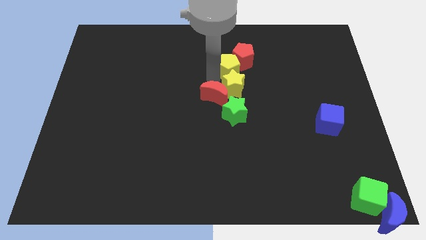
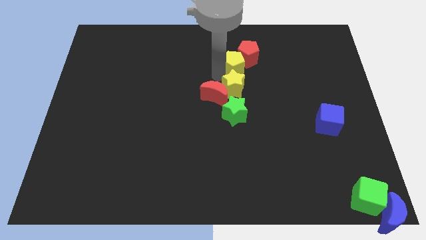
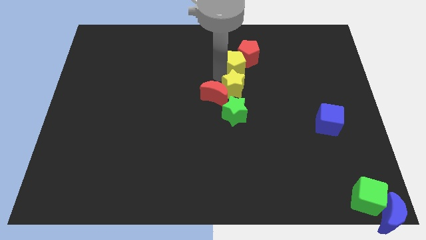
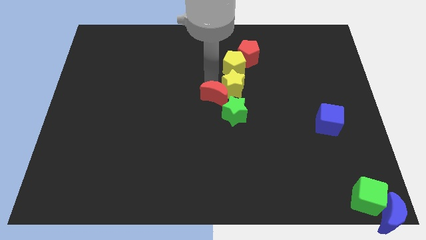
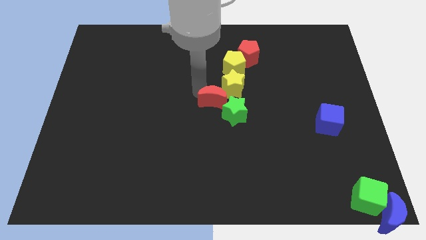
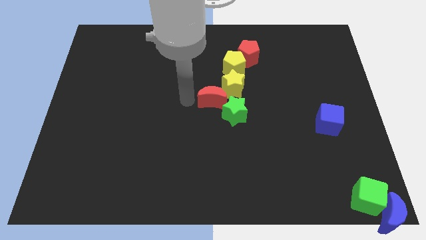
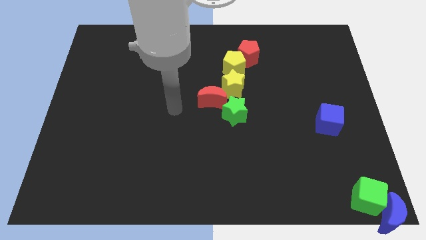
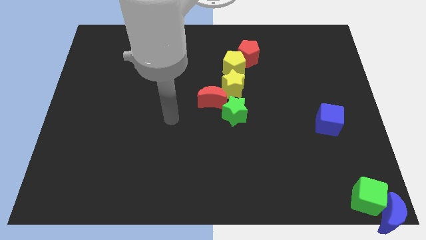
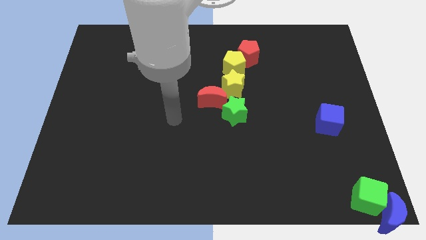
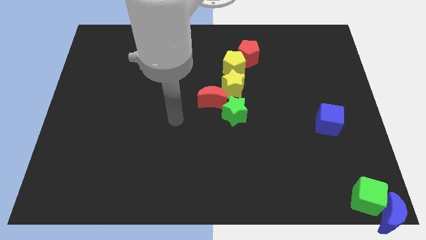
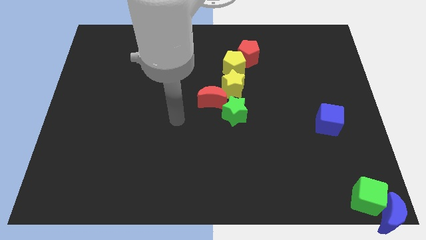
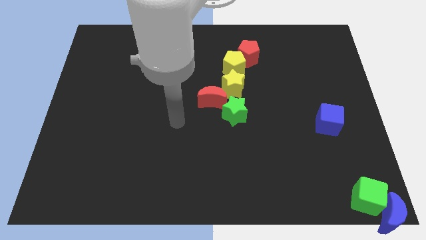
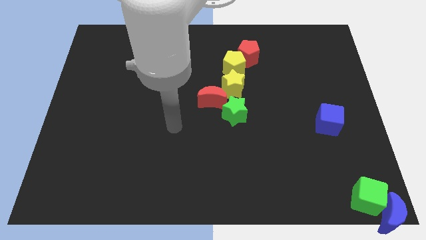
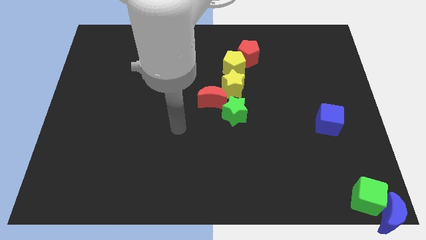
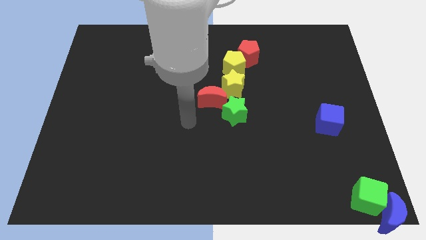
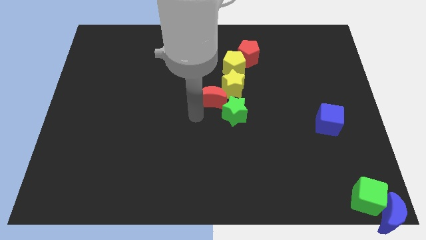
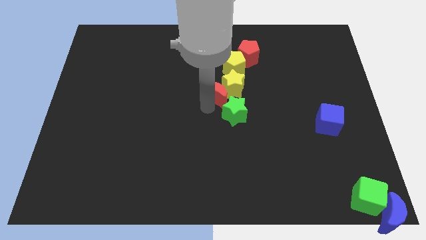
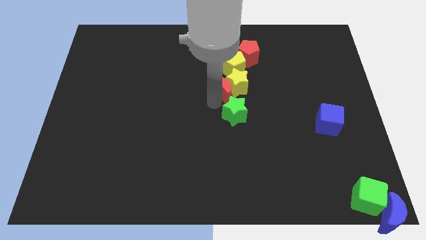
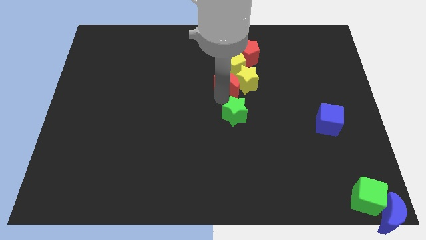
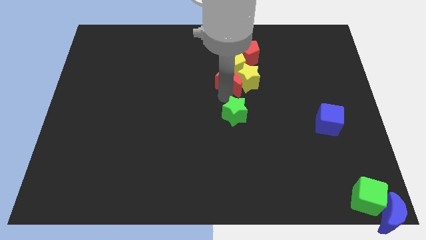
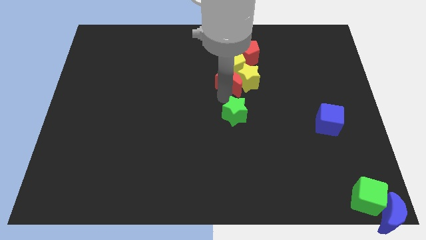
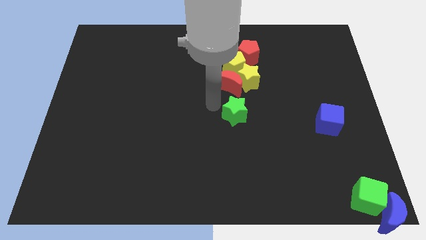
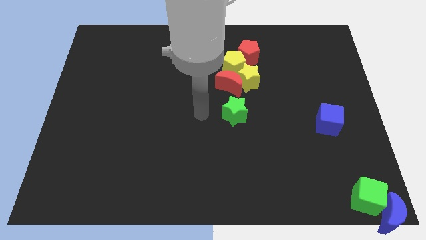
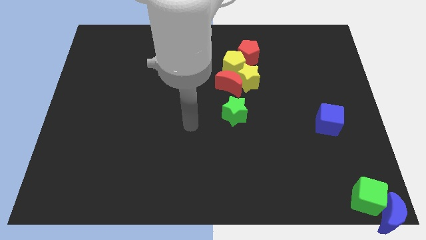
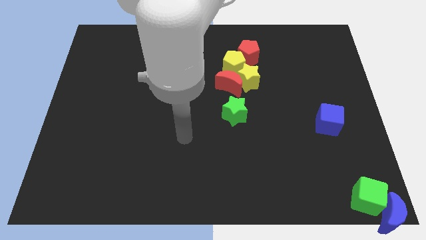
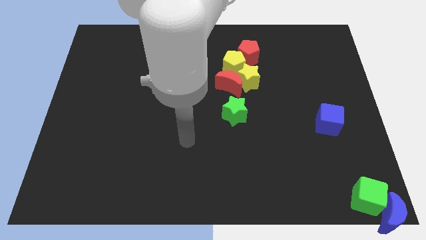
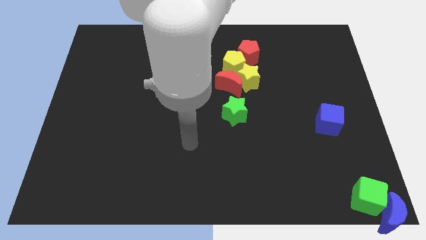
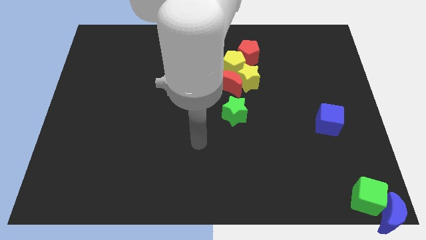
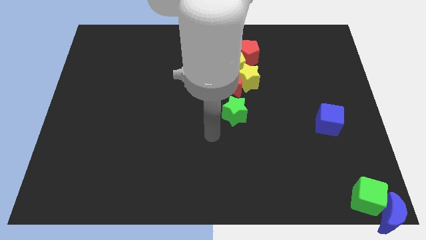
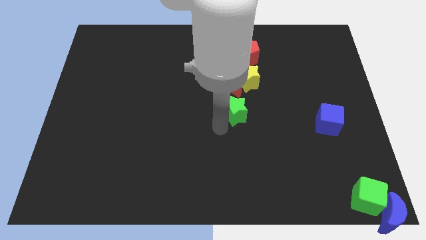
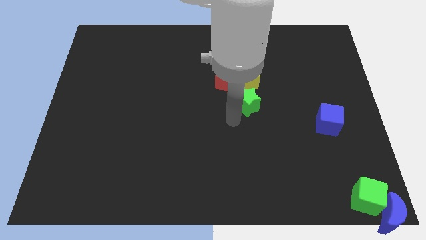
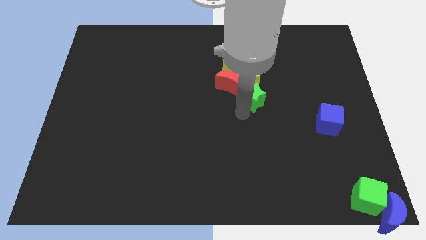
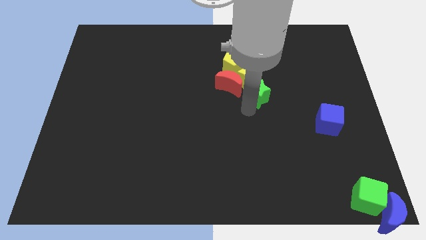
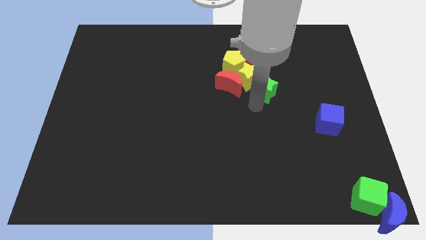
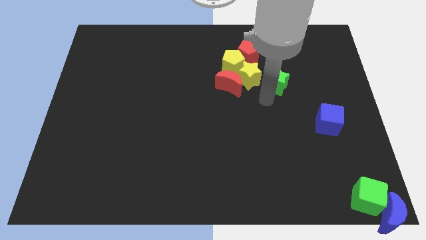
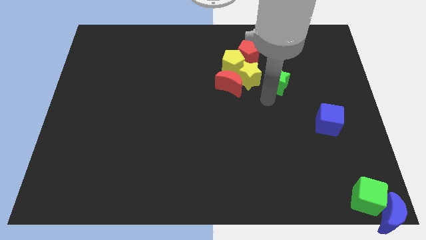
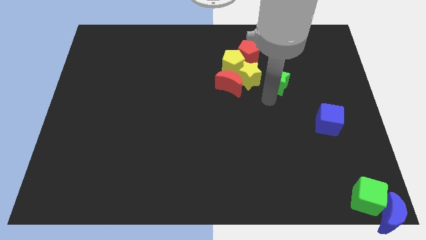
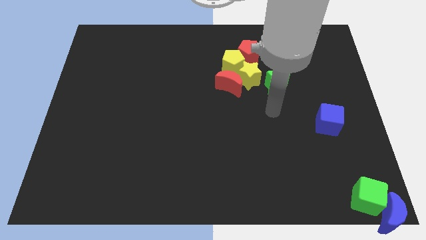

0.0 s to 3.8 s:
push the yellow blocks red blocks and green star towards top right

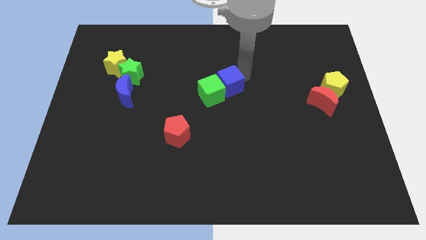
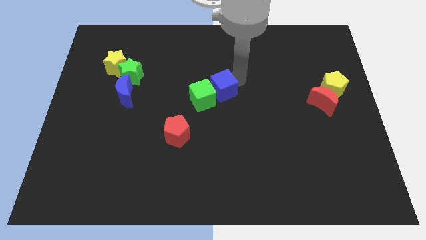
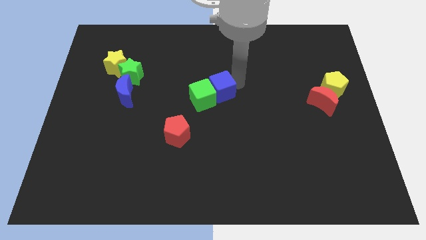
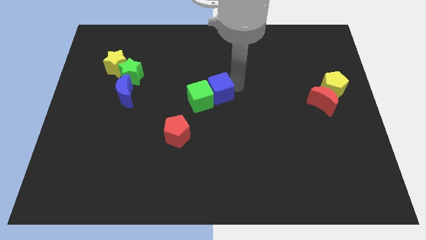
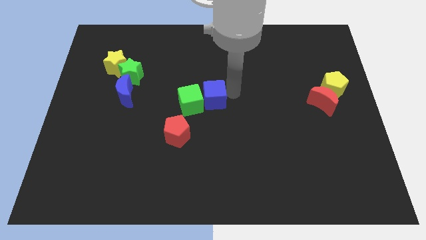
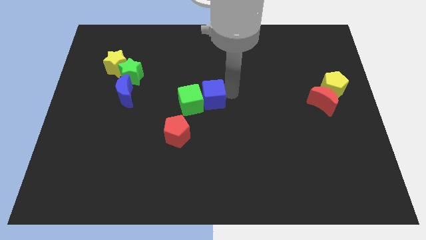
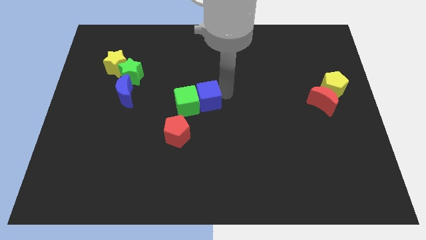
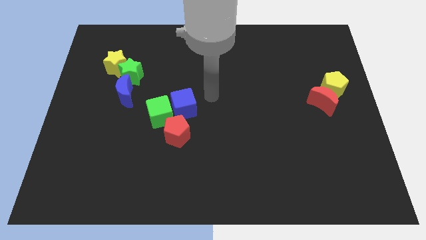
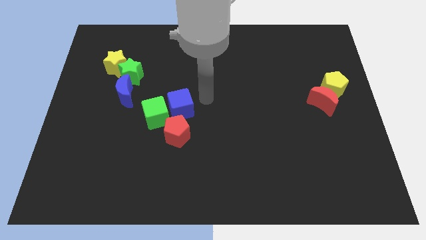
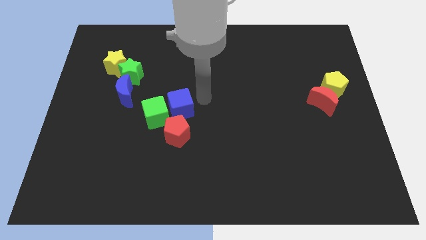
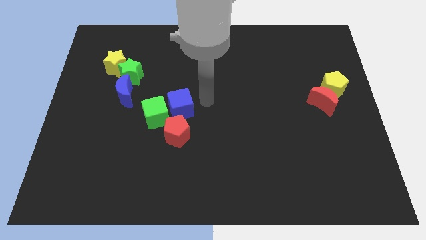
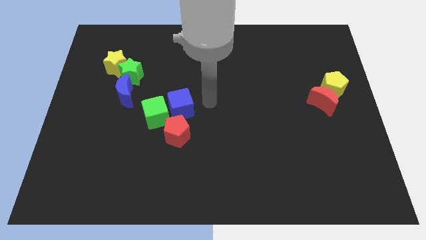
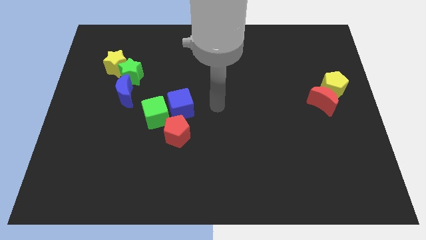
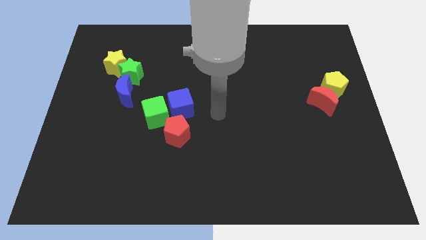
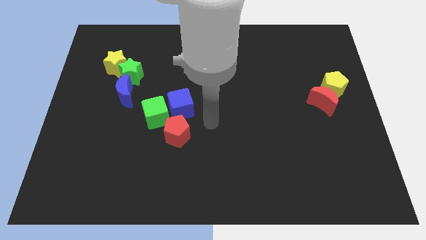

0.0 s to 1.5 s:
place the green cube diagonal to the bottom right side of the blue moon

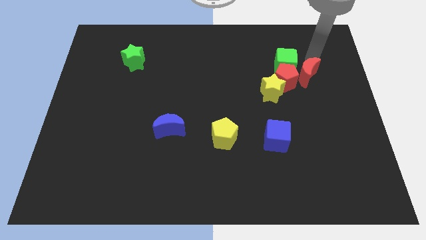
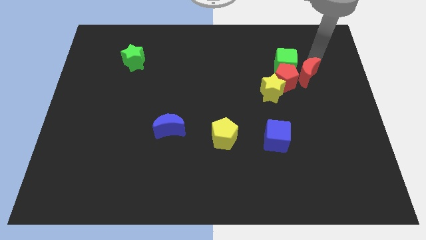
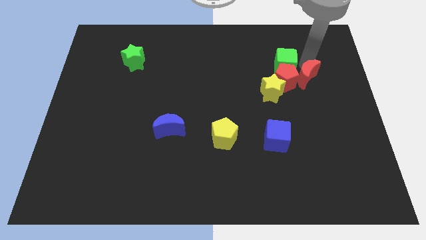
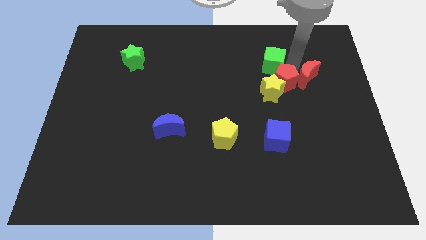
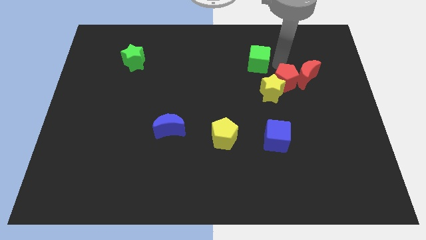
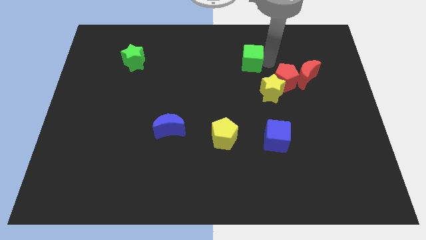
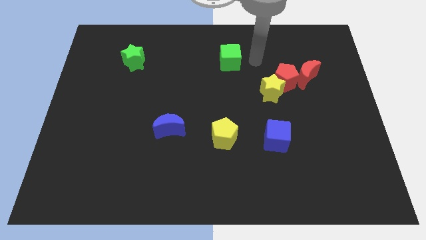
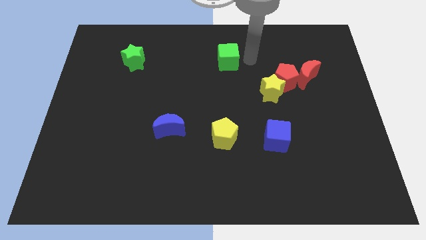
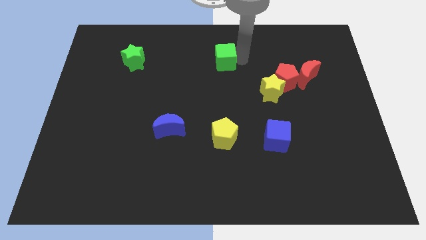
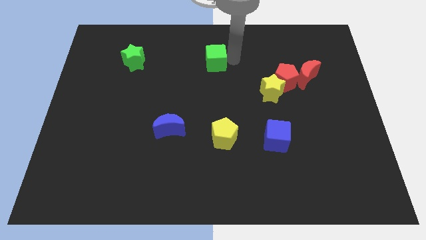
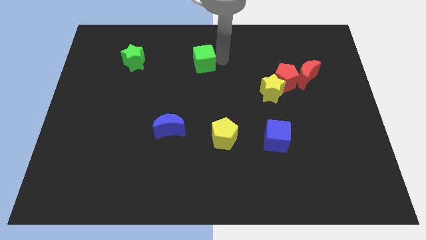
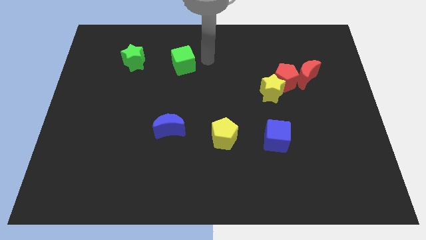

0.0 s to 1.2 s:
separate the green cube from the top side of the red pentagon

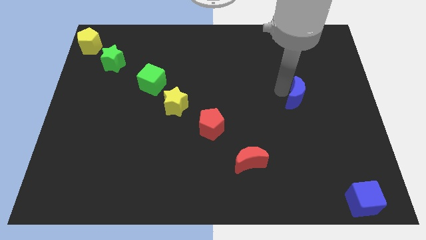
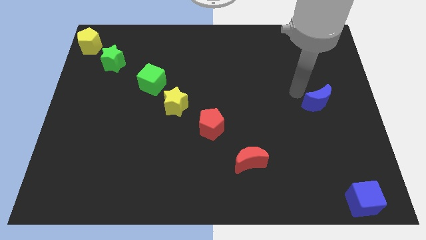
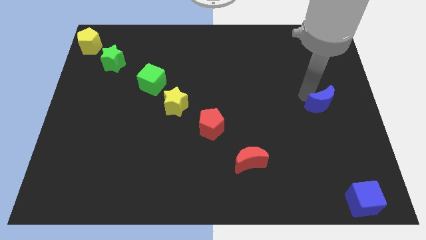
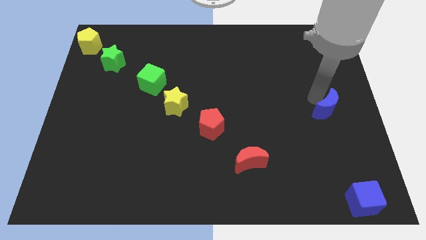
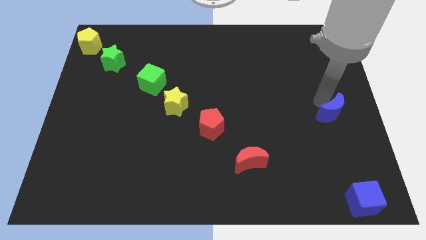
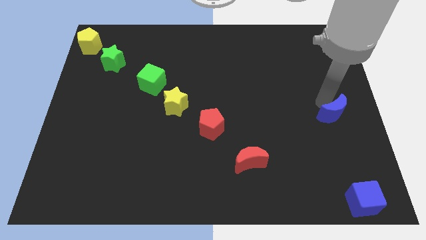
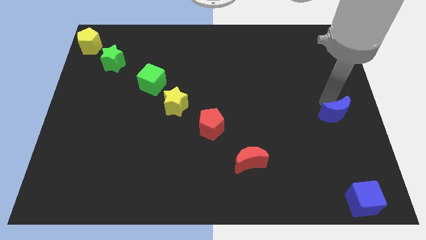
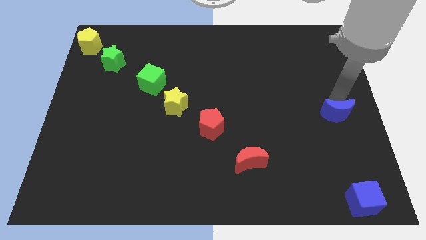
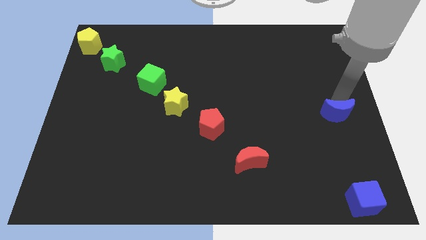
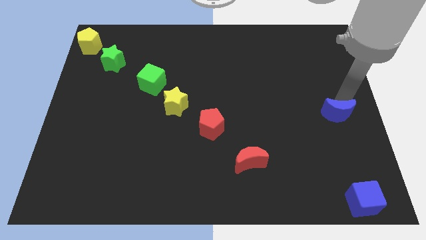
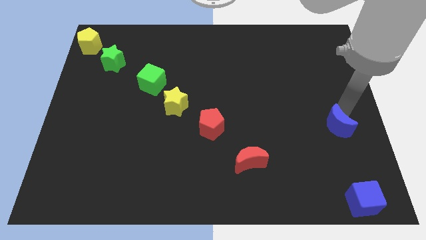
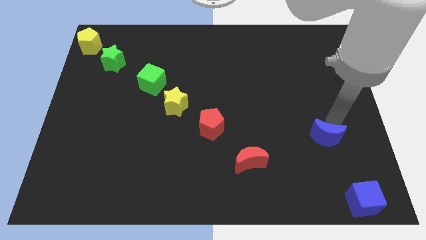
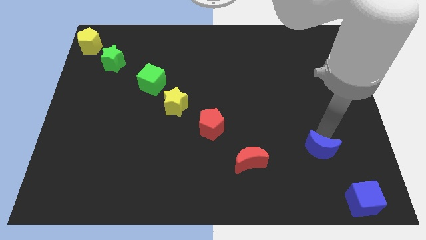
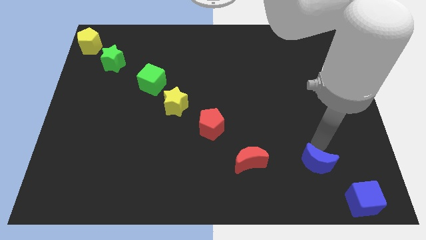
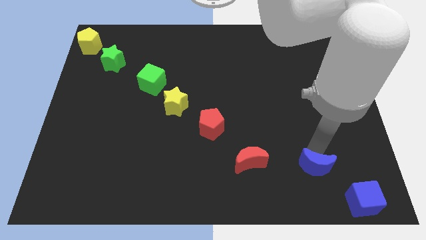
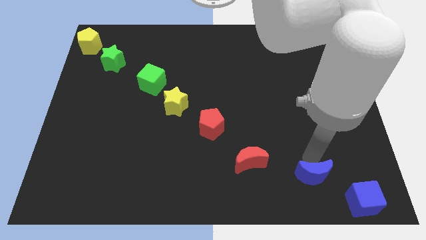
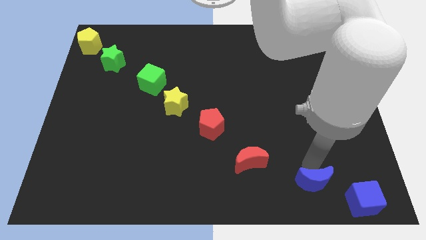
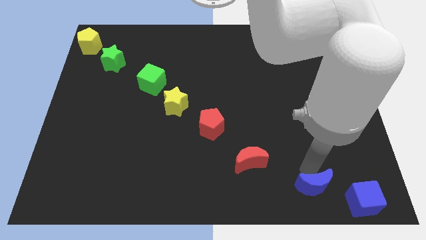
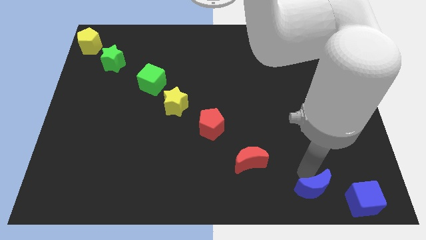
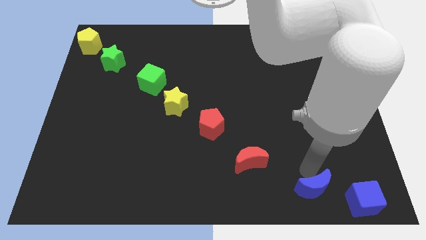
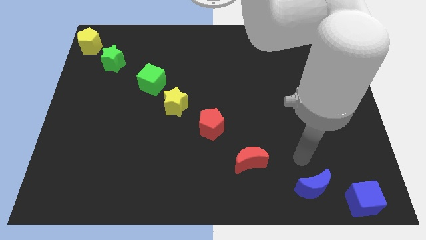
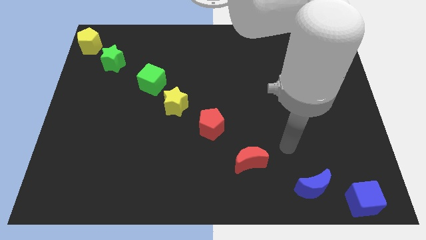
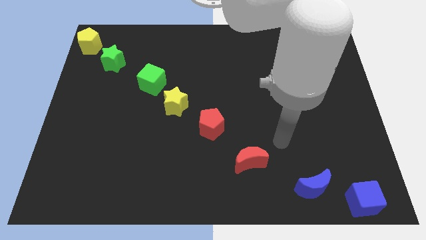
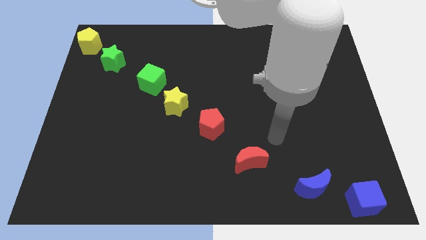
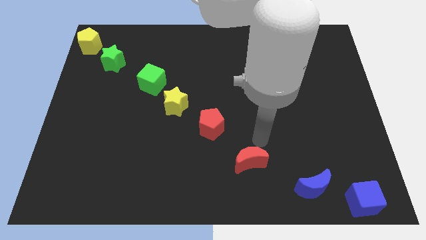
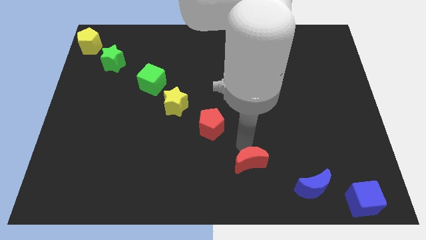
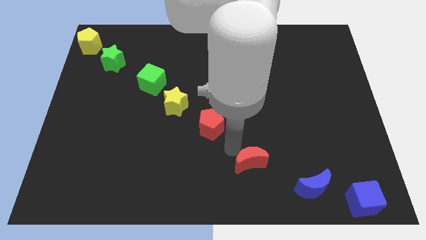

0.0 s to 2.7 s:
place the blue moon between red moon and blue cube
